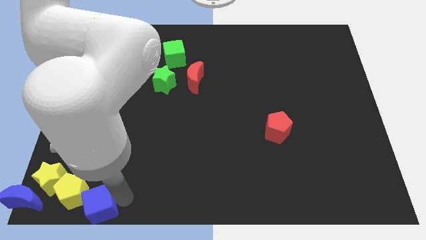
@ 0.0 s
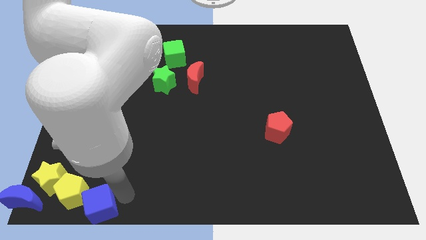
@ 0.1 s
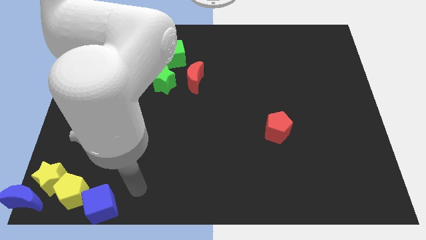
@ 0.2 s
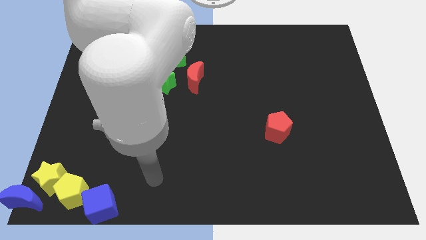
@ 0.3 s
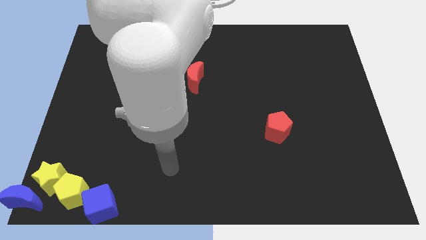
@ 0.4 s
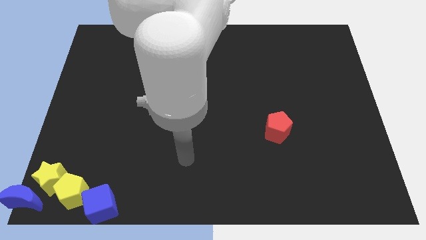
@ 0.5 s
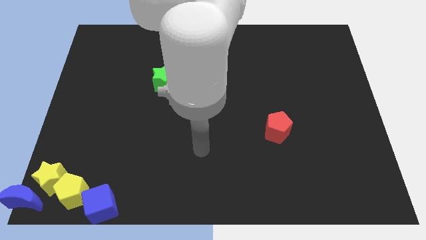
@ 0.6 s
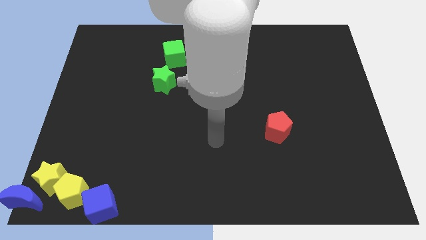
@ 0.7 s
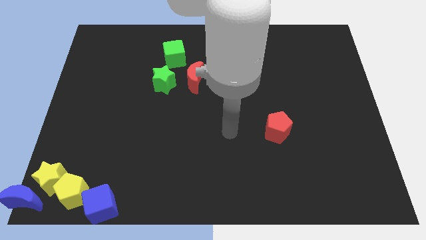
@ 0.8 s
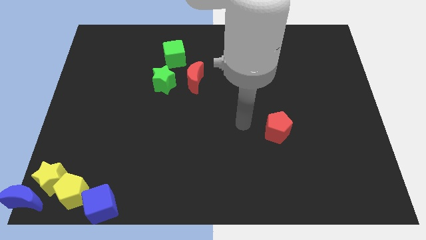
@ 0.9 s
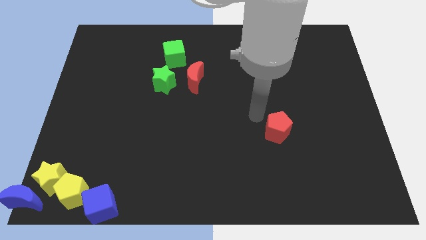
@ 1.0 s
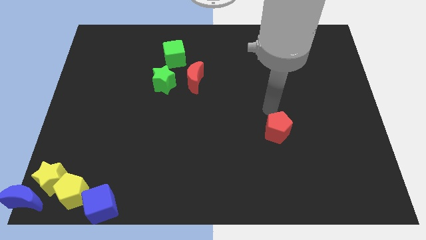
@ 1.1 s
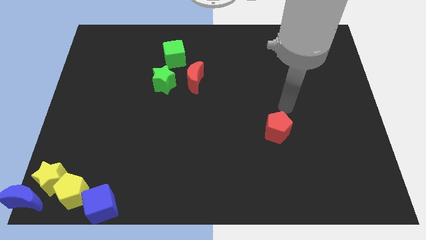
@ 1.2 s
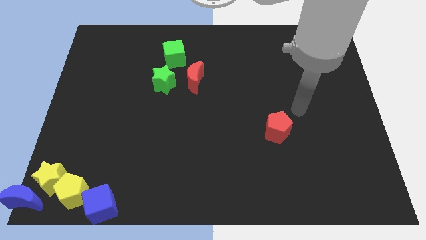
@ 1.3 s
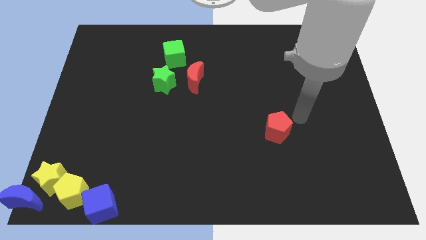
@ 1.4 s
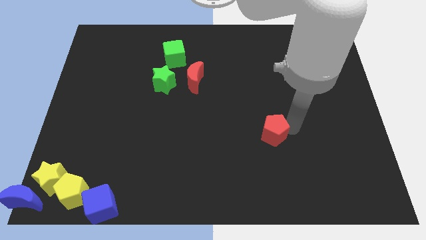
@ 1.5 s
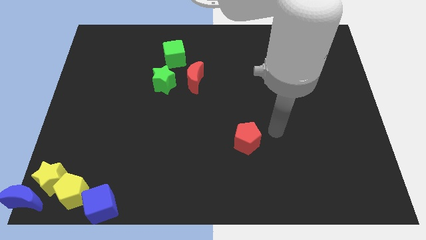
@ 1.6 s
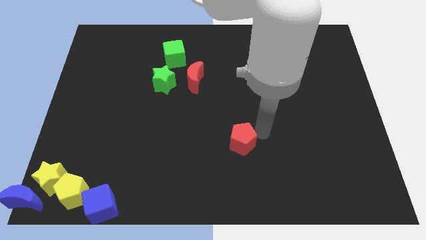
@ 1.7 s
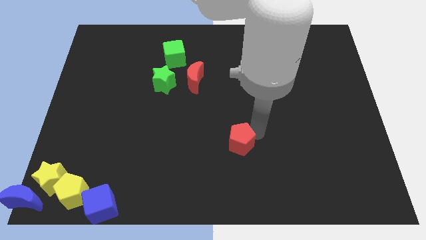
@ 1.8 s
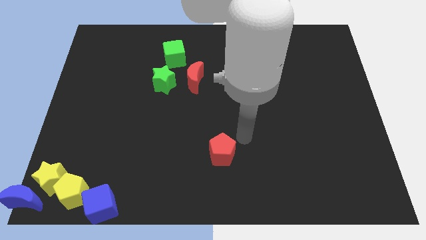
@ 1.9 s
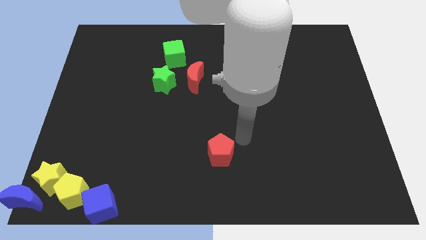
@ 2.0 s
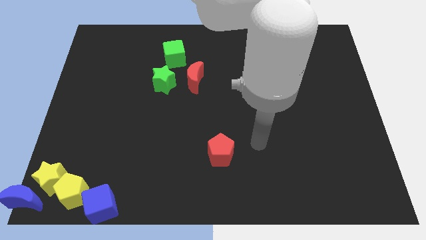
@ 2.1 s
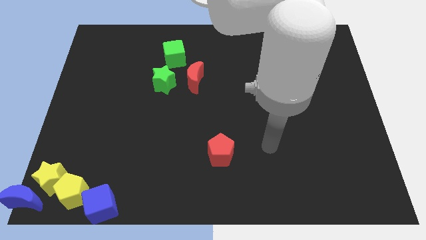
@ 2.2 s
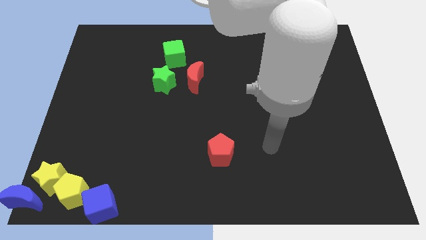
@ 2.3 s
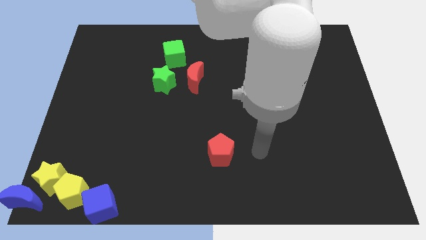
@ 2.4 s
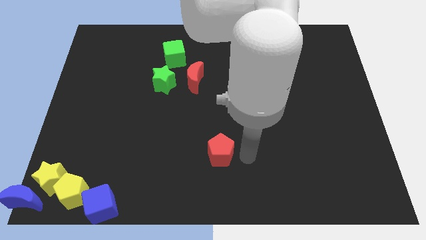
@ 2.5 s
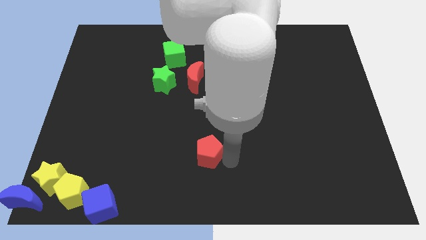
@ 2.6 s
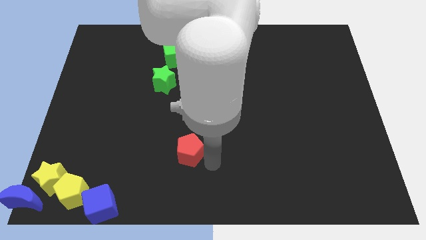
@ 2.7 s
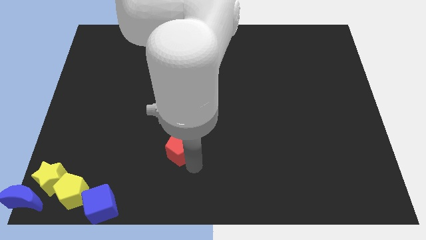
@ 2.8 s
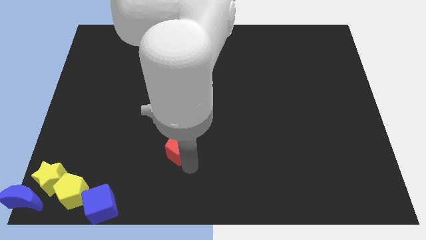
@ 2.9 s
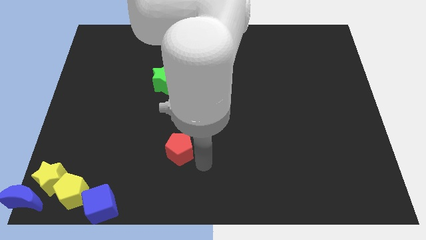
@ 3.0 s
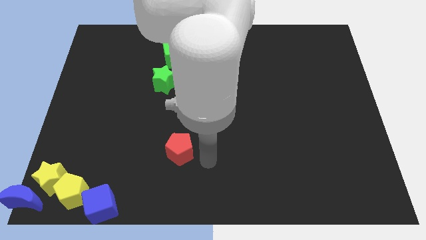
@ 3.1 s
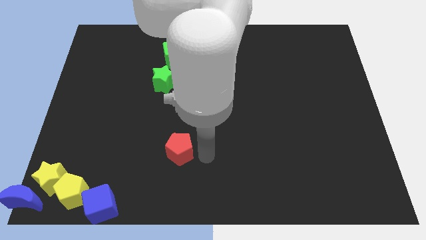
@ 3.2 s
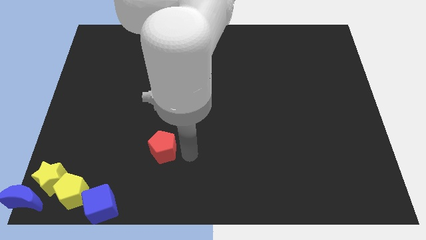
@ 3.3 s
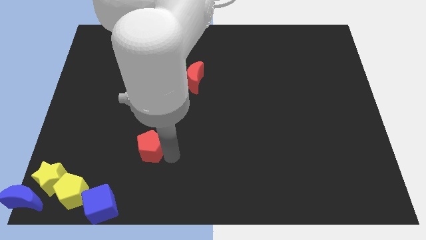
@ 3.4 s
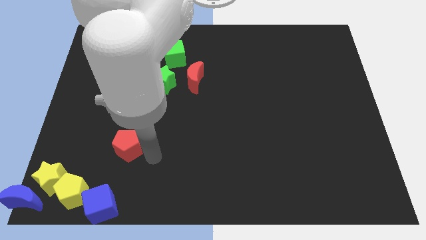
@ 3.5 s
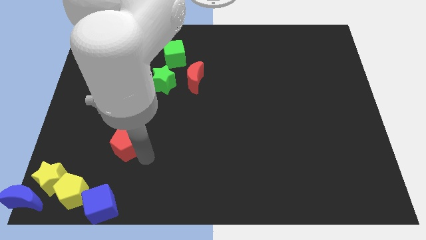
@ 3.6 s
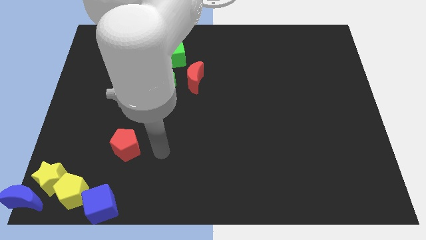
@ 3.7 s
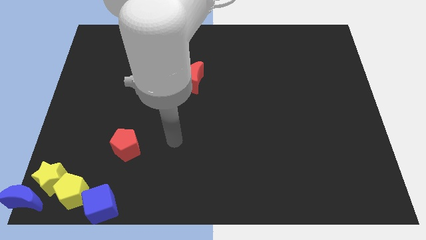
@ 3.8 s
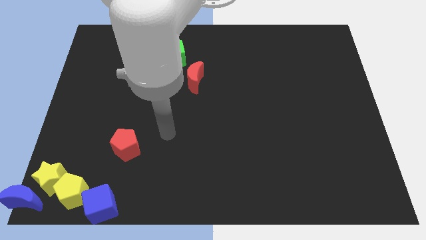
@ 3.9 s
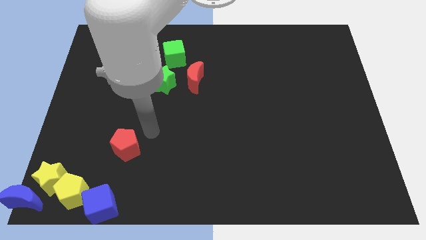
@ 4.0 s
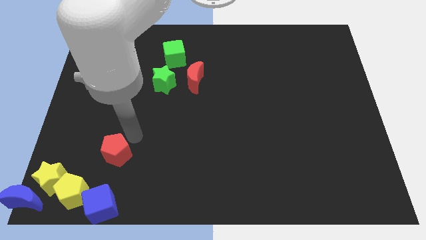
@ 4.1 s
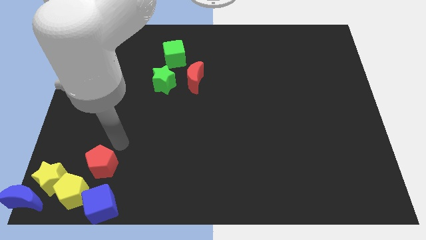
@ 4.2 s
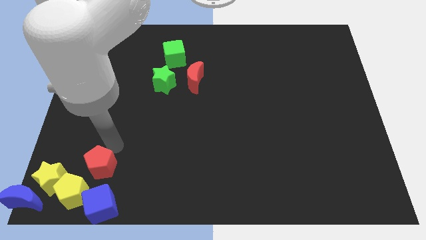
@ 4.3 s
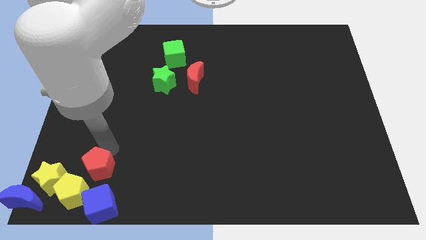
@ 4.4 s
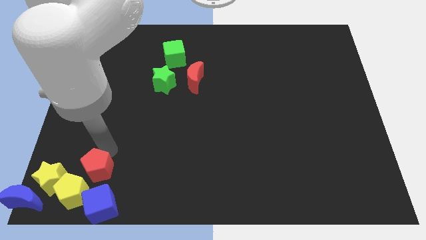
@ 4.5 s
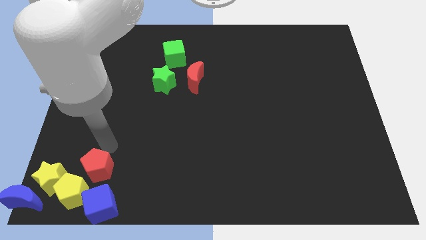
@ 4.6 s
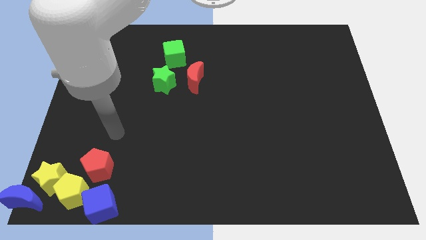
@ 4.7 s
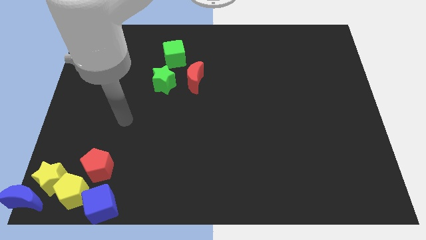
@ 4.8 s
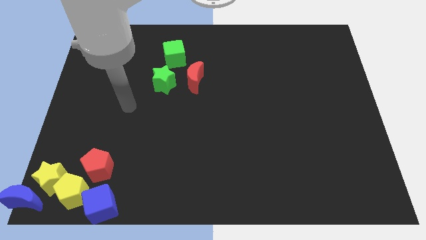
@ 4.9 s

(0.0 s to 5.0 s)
move the red pentagon to the top of the yellow pentagon at the bottom left of the board

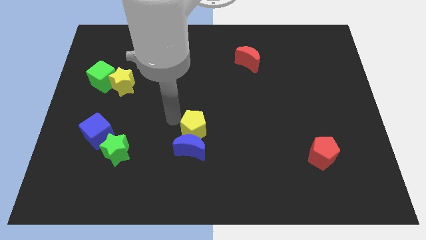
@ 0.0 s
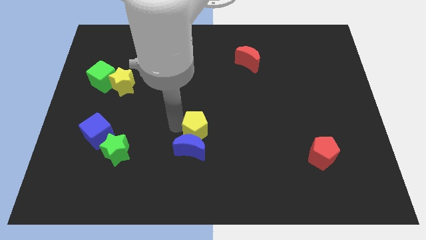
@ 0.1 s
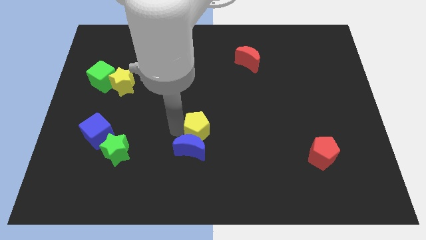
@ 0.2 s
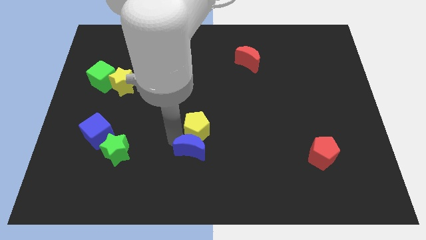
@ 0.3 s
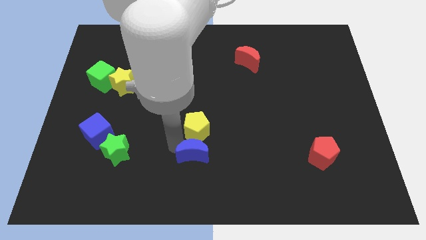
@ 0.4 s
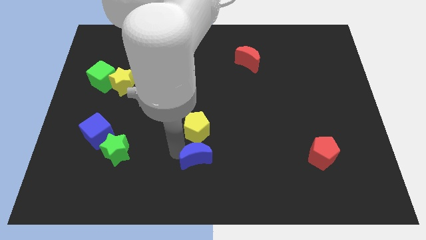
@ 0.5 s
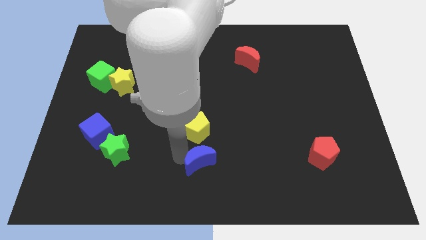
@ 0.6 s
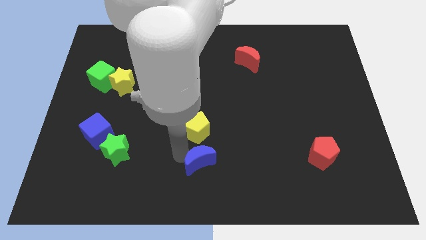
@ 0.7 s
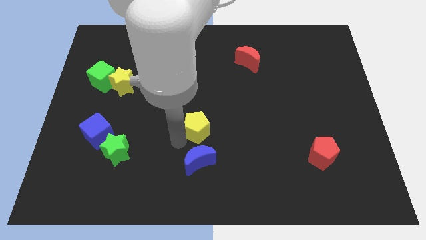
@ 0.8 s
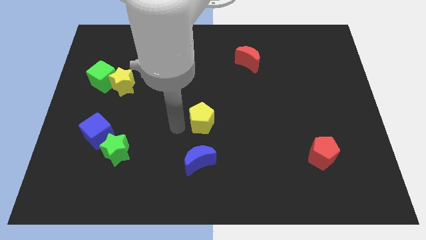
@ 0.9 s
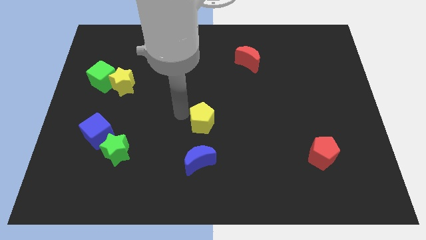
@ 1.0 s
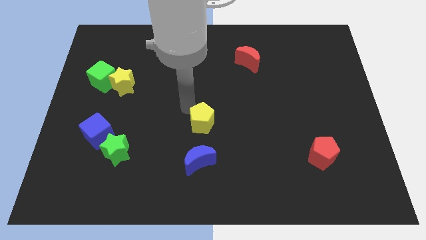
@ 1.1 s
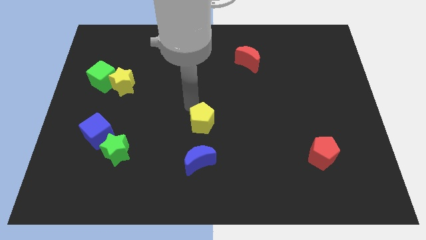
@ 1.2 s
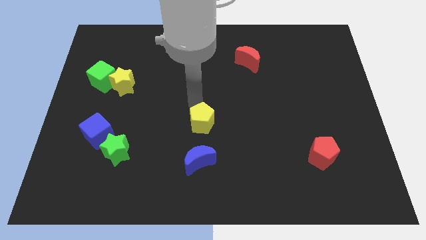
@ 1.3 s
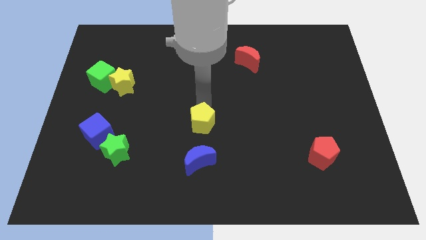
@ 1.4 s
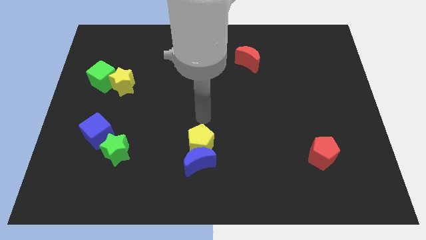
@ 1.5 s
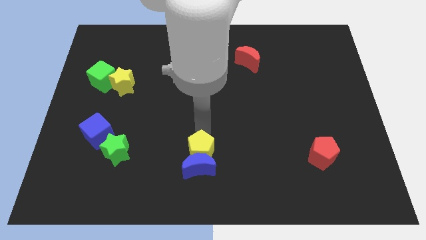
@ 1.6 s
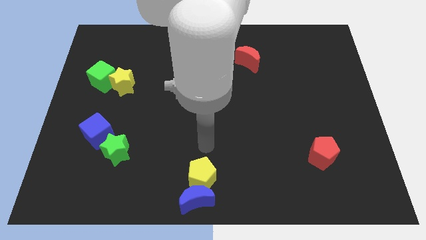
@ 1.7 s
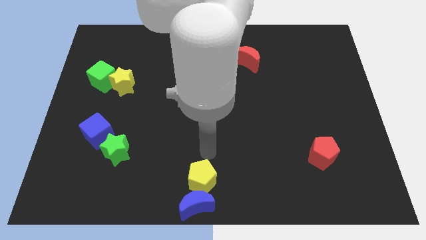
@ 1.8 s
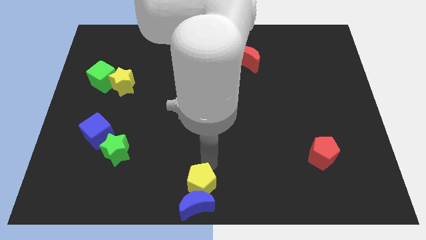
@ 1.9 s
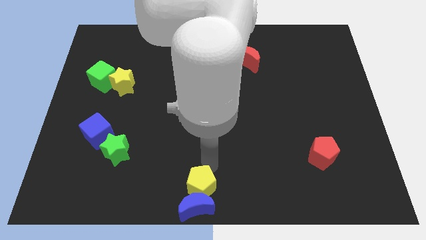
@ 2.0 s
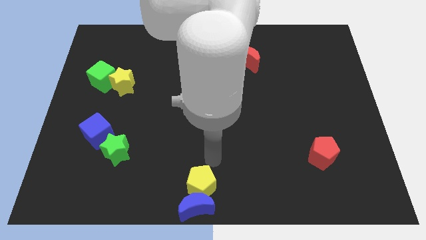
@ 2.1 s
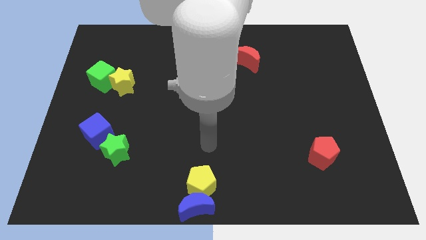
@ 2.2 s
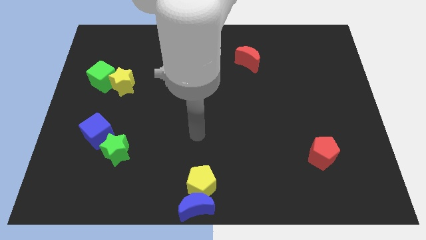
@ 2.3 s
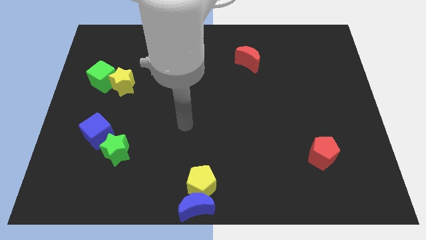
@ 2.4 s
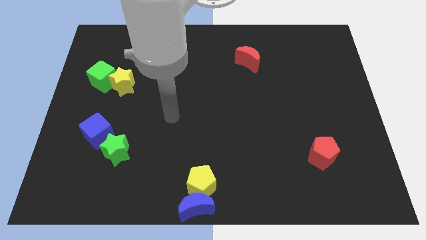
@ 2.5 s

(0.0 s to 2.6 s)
move yellow pentagon and blue moon to the bottom middle of the board

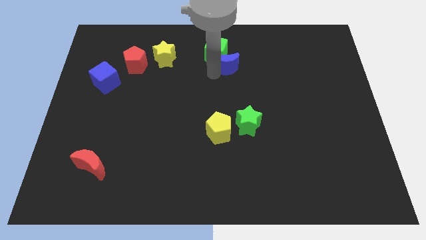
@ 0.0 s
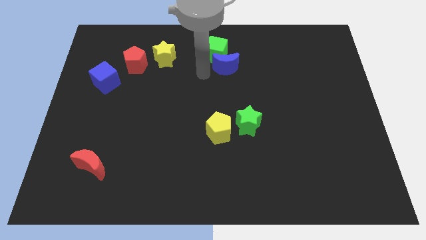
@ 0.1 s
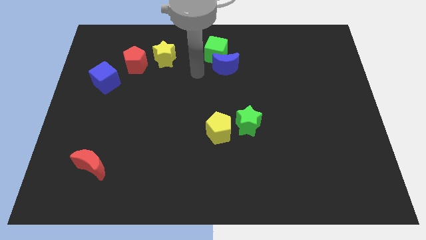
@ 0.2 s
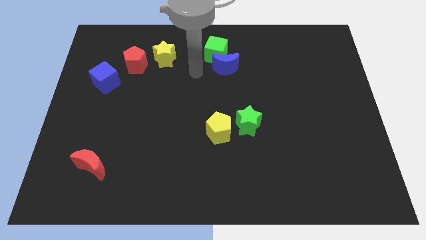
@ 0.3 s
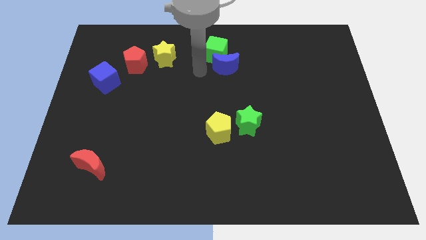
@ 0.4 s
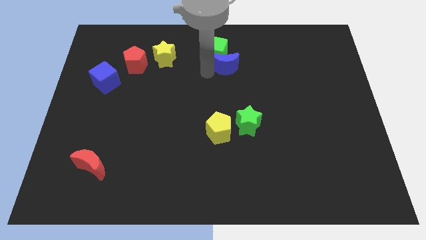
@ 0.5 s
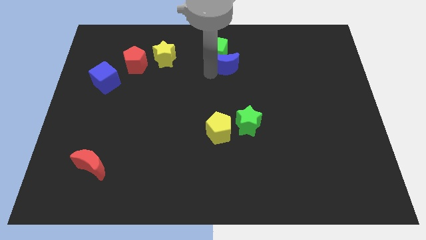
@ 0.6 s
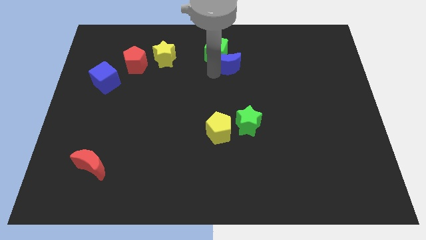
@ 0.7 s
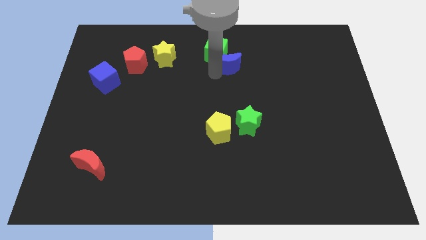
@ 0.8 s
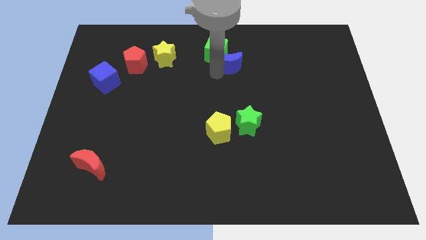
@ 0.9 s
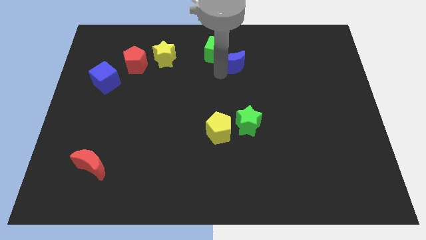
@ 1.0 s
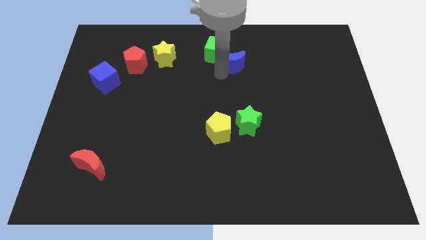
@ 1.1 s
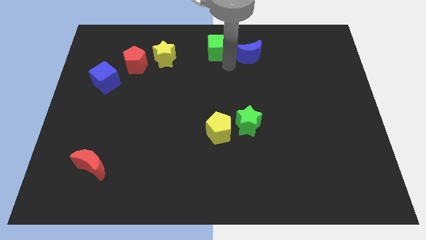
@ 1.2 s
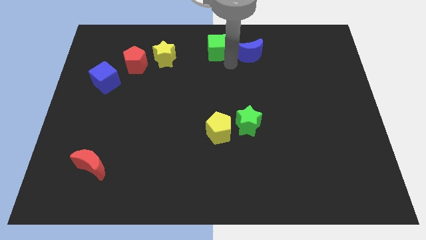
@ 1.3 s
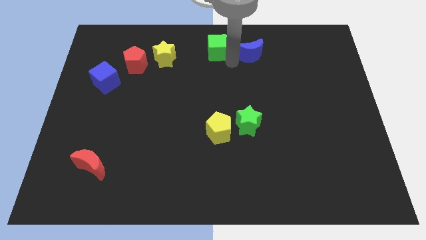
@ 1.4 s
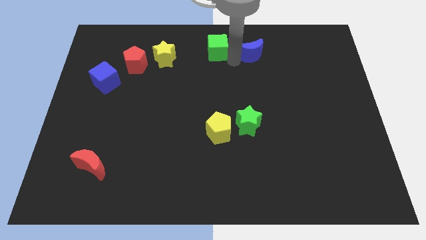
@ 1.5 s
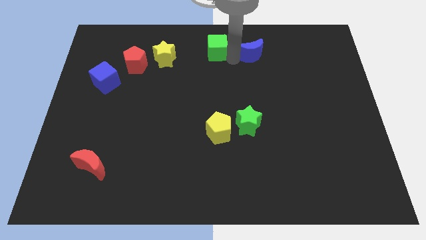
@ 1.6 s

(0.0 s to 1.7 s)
move the blue crescent to the right of the green cube
